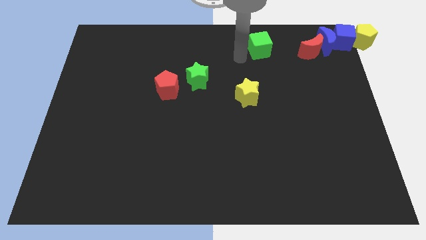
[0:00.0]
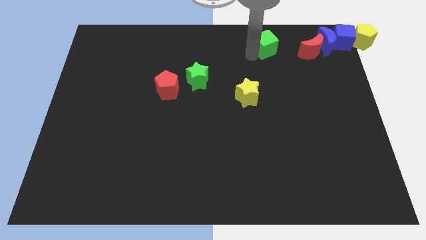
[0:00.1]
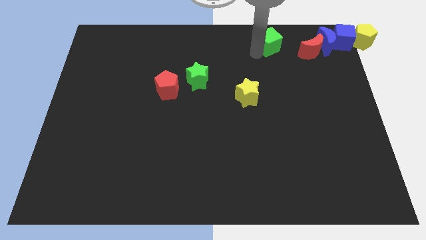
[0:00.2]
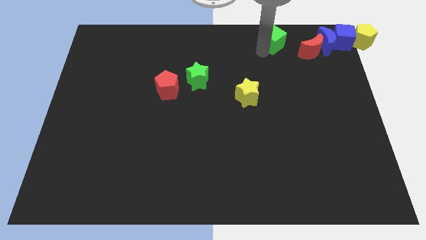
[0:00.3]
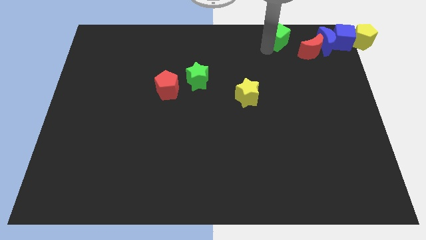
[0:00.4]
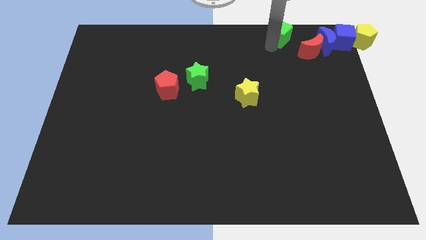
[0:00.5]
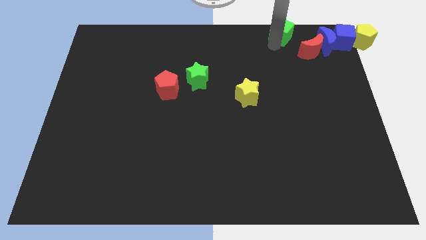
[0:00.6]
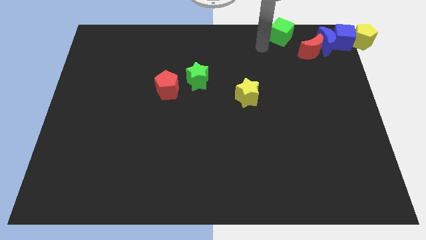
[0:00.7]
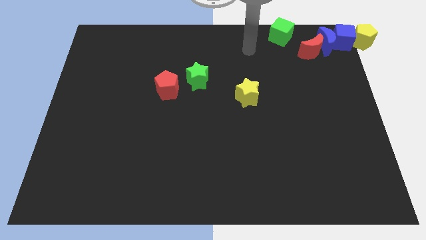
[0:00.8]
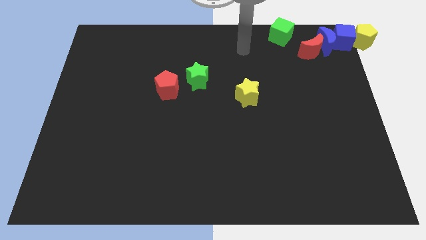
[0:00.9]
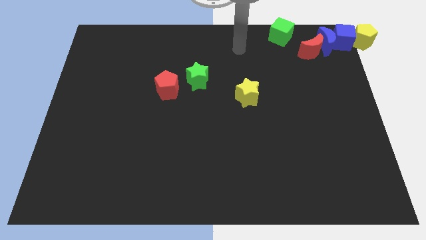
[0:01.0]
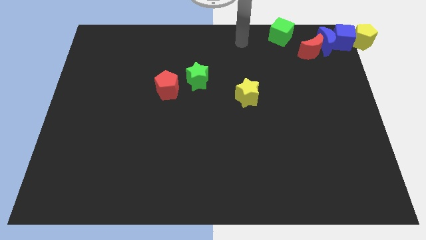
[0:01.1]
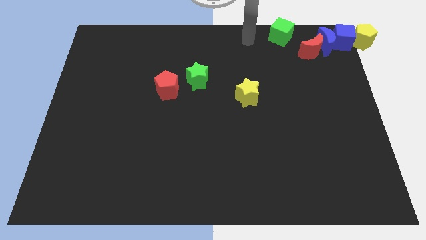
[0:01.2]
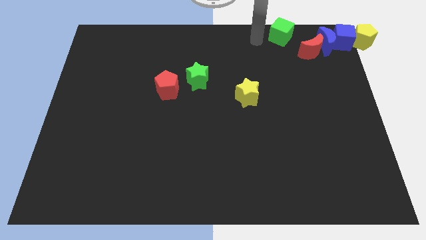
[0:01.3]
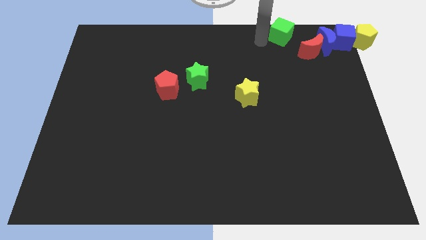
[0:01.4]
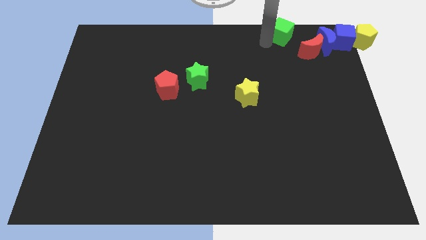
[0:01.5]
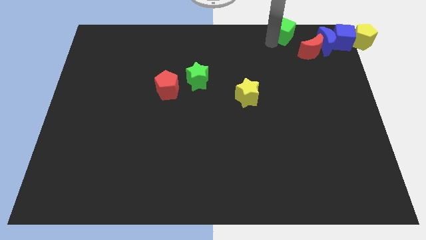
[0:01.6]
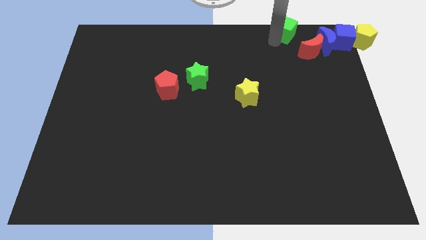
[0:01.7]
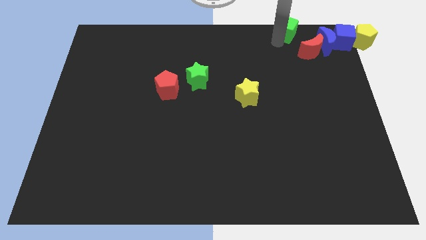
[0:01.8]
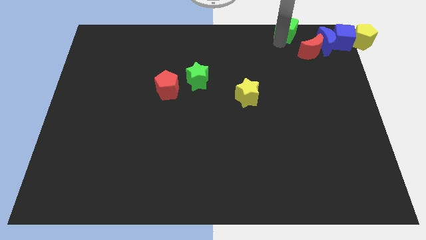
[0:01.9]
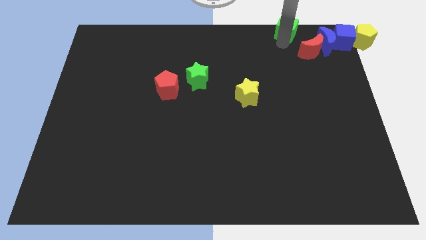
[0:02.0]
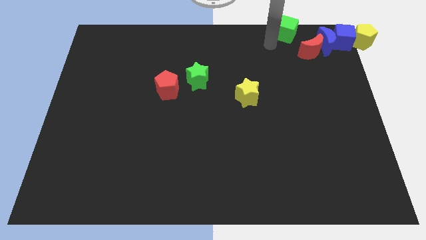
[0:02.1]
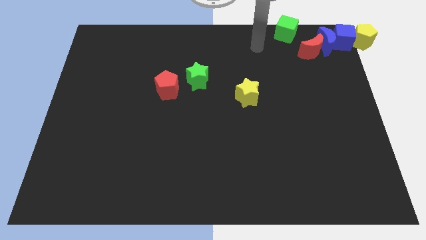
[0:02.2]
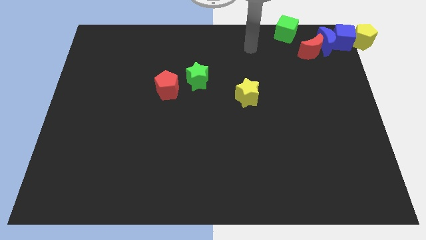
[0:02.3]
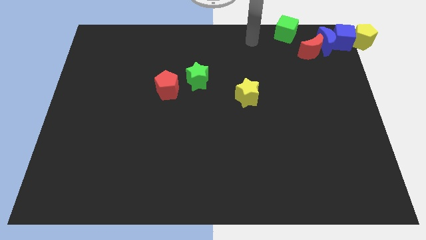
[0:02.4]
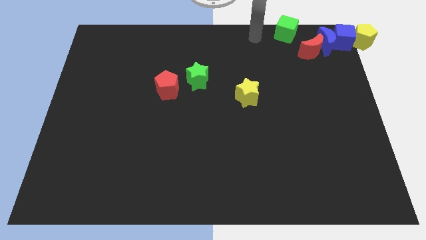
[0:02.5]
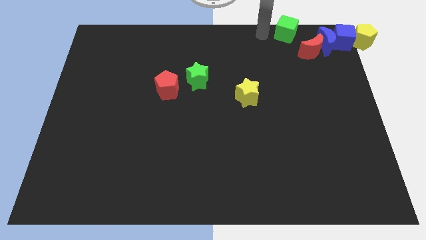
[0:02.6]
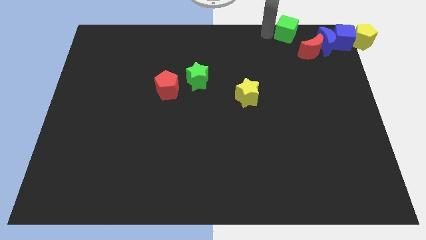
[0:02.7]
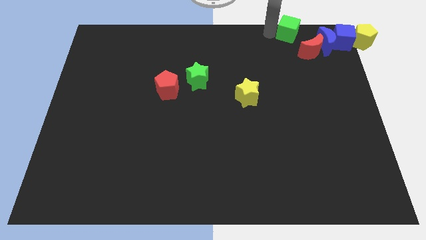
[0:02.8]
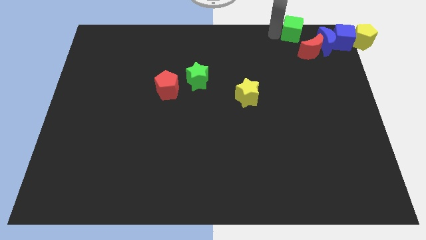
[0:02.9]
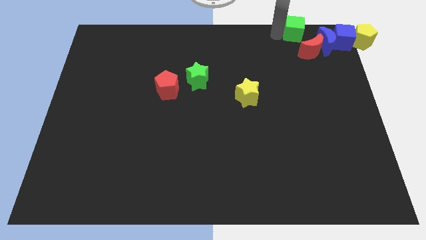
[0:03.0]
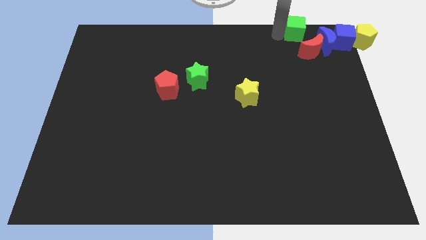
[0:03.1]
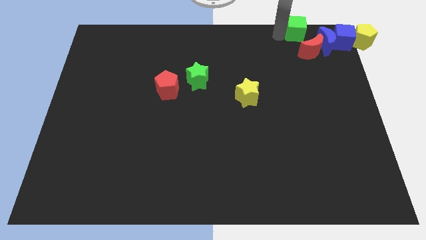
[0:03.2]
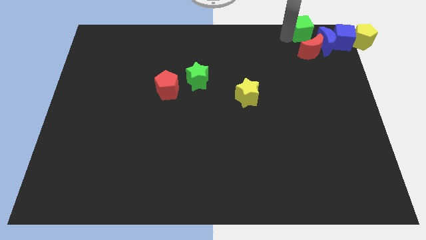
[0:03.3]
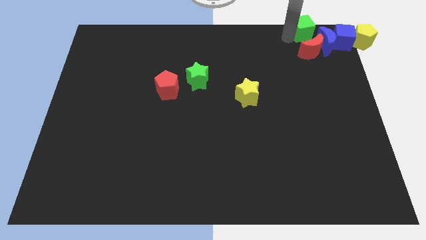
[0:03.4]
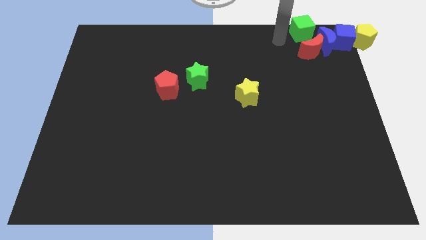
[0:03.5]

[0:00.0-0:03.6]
place the green cube above the red crescent

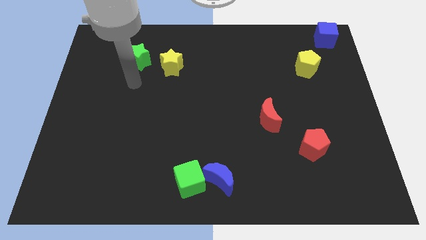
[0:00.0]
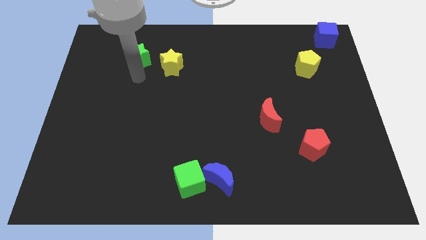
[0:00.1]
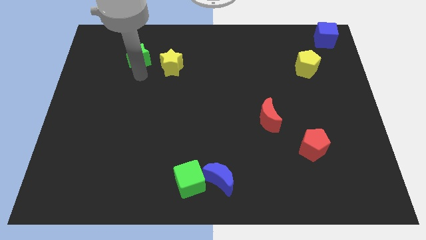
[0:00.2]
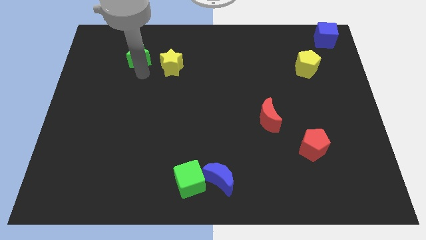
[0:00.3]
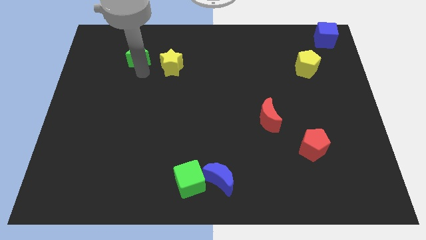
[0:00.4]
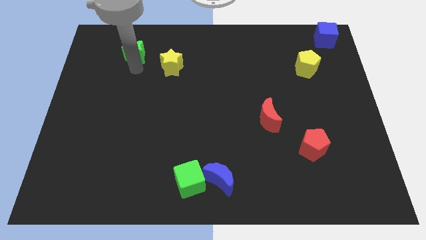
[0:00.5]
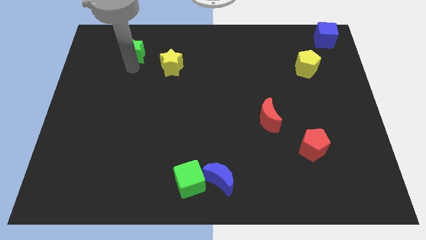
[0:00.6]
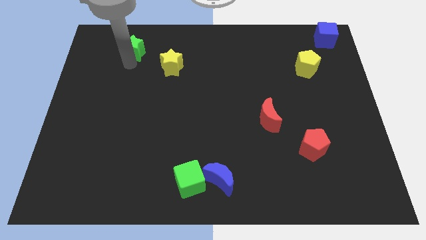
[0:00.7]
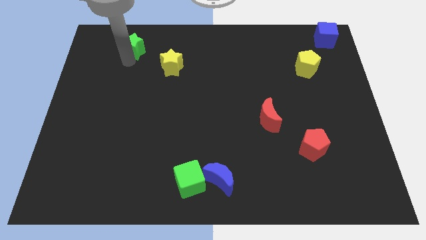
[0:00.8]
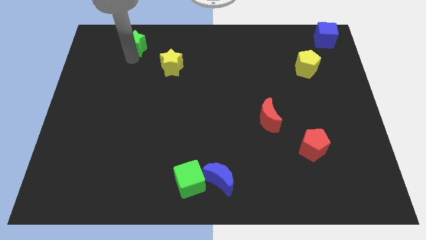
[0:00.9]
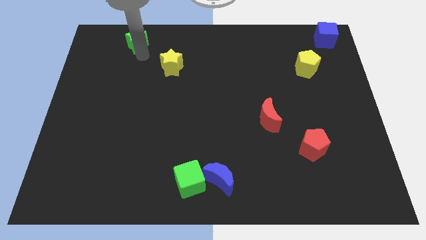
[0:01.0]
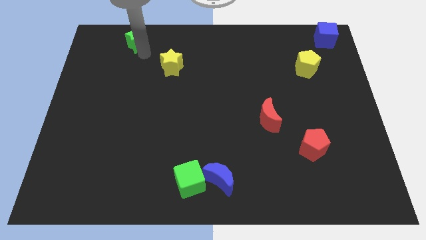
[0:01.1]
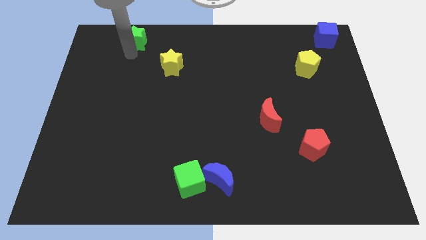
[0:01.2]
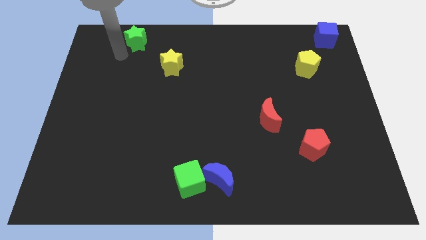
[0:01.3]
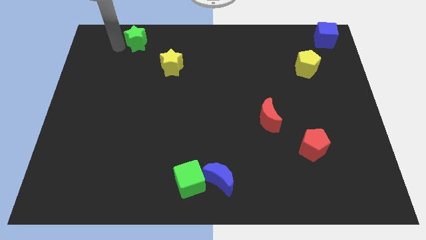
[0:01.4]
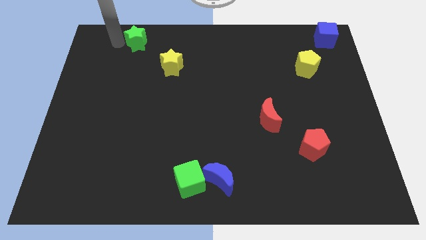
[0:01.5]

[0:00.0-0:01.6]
move the green star to the top side

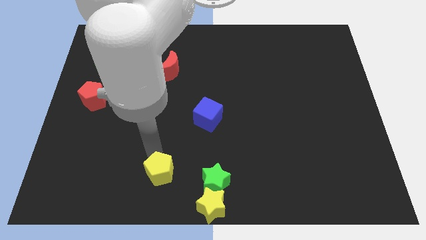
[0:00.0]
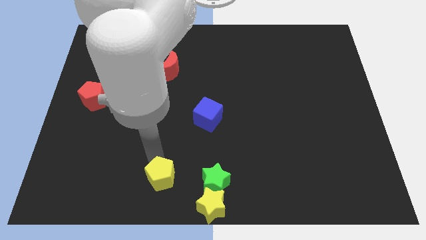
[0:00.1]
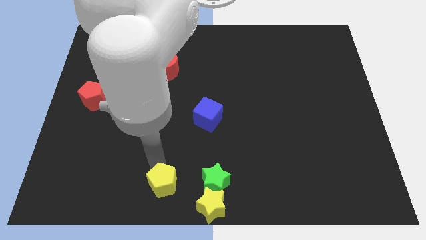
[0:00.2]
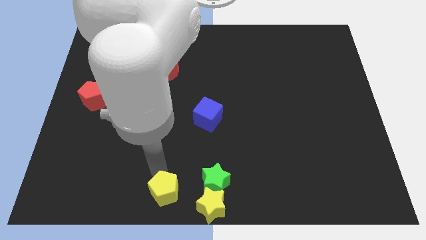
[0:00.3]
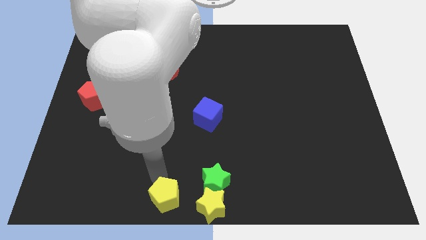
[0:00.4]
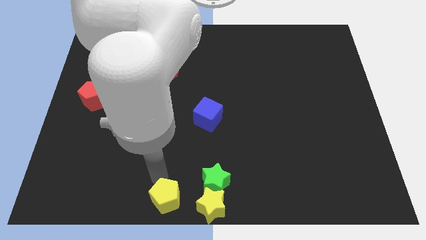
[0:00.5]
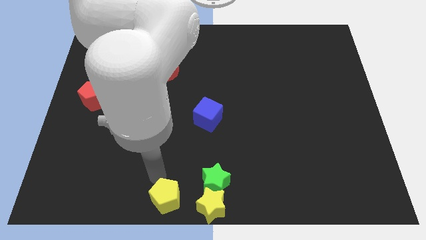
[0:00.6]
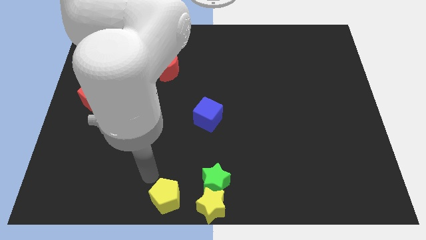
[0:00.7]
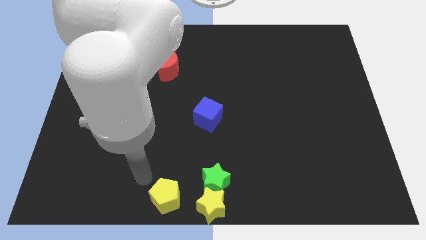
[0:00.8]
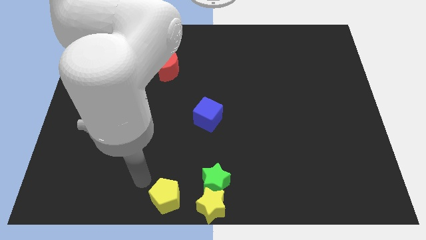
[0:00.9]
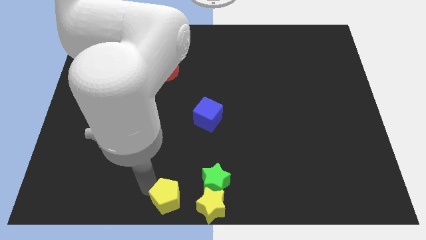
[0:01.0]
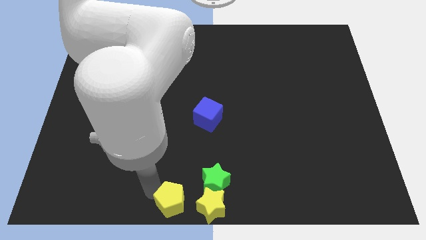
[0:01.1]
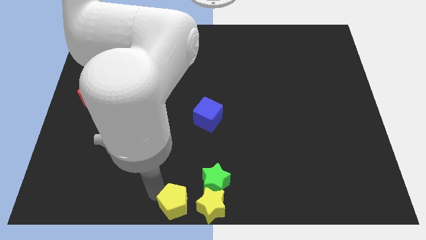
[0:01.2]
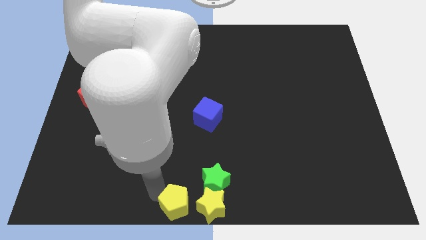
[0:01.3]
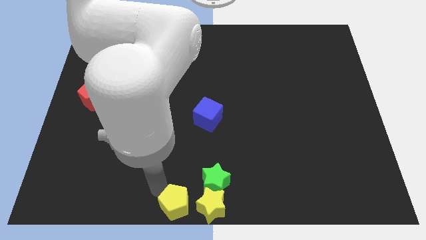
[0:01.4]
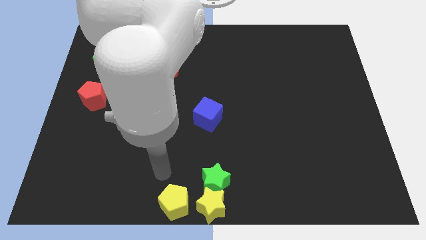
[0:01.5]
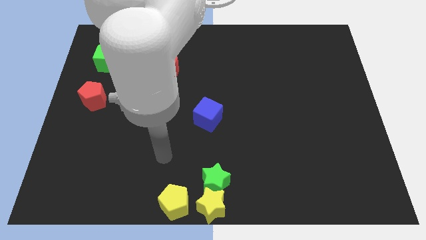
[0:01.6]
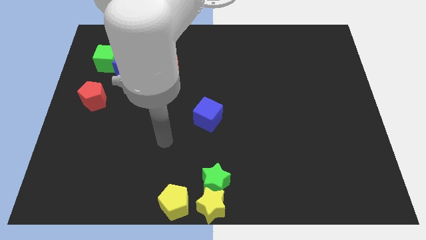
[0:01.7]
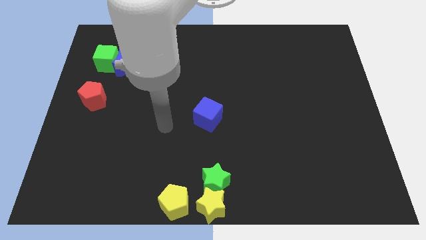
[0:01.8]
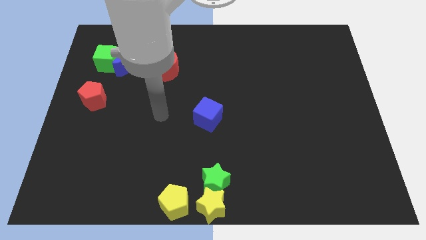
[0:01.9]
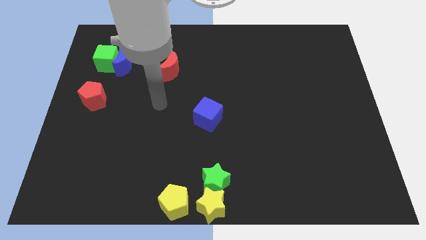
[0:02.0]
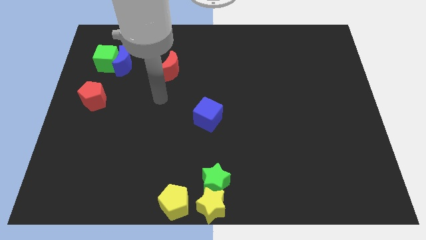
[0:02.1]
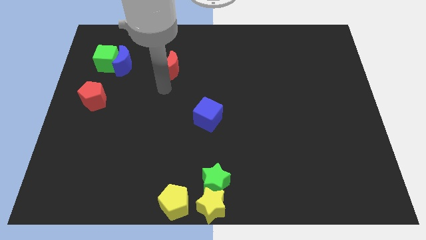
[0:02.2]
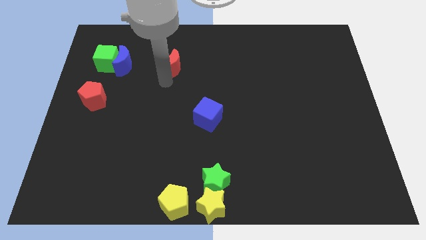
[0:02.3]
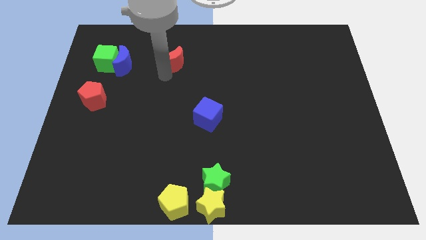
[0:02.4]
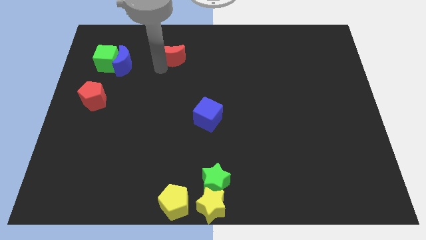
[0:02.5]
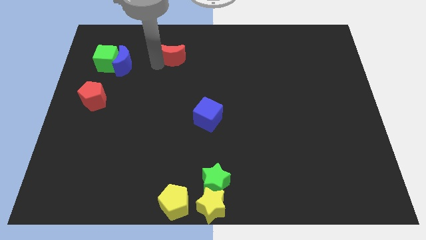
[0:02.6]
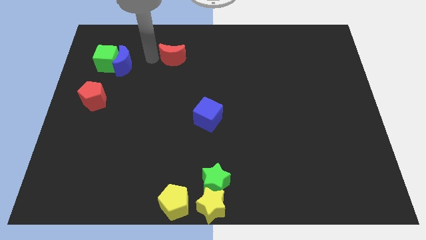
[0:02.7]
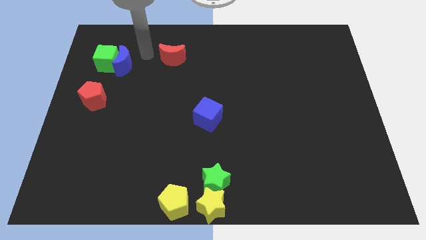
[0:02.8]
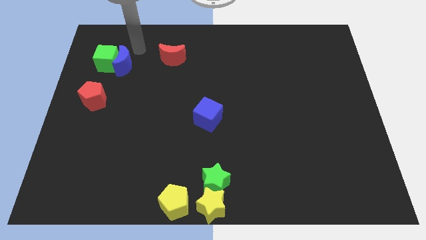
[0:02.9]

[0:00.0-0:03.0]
place yellow pentagon left to the yellow star

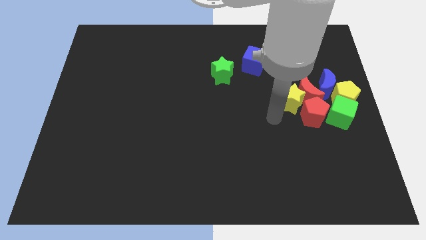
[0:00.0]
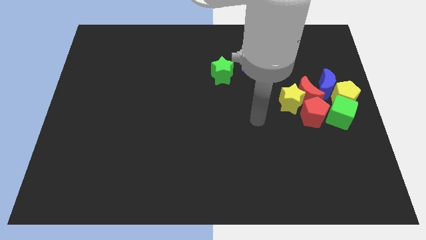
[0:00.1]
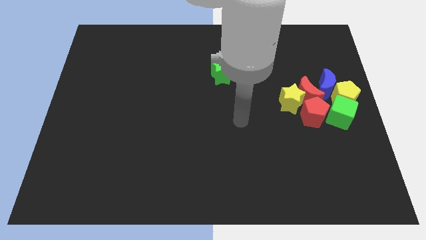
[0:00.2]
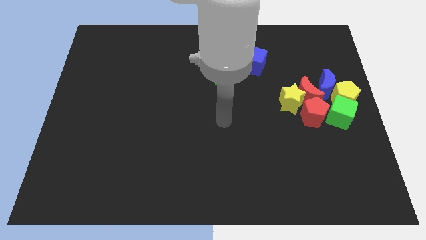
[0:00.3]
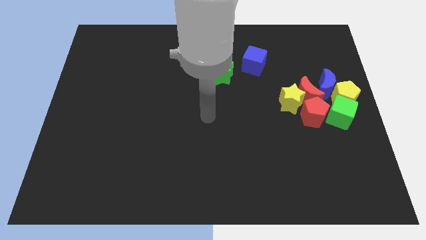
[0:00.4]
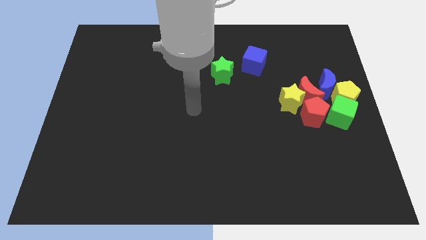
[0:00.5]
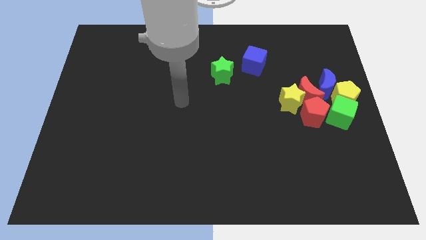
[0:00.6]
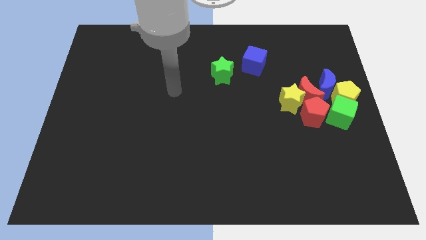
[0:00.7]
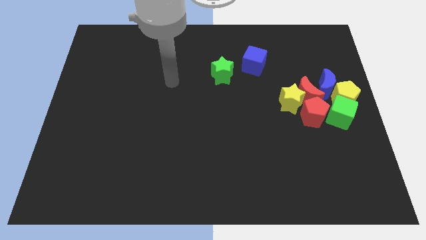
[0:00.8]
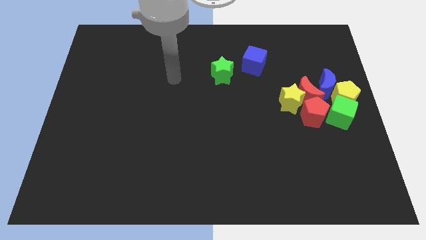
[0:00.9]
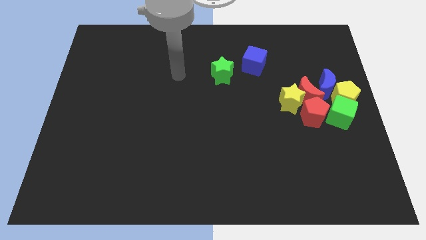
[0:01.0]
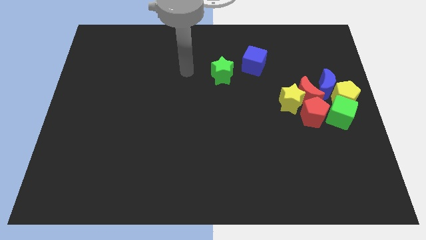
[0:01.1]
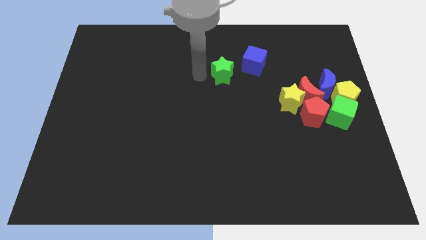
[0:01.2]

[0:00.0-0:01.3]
place your arm to the left of the green star
